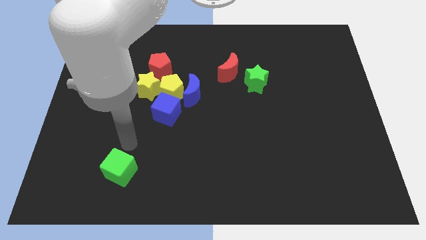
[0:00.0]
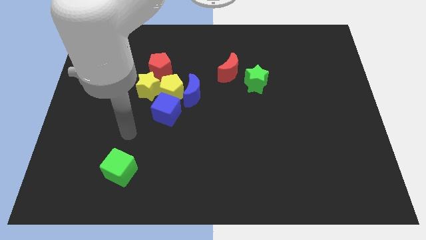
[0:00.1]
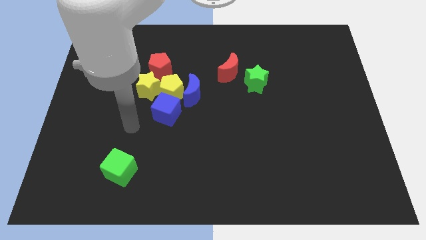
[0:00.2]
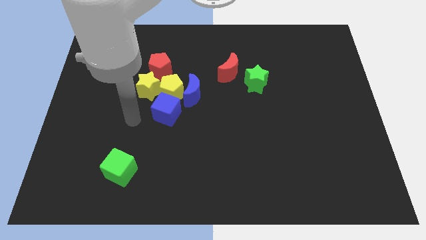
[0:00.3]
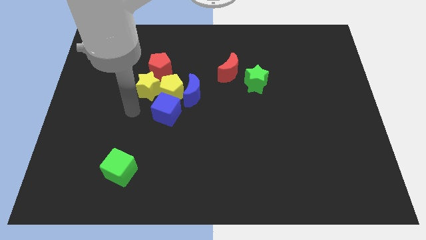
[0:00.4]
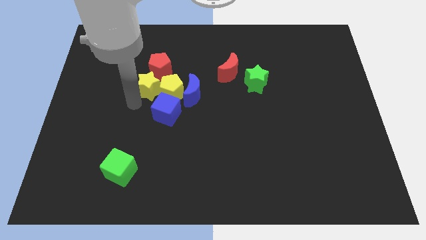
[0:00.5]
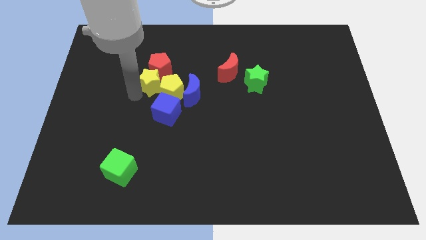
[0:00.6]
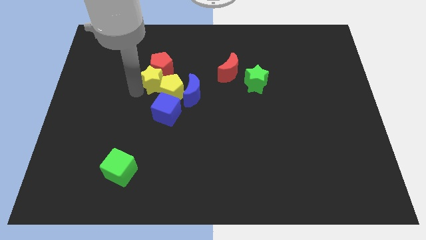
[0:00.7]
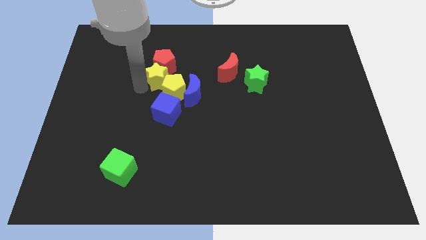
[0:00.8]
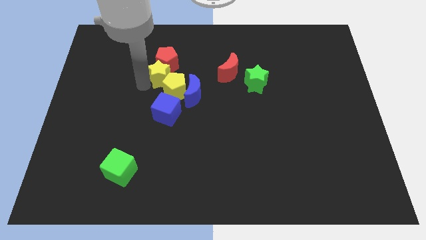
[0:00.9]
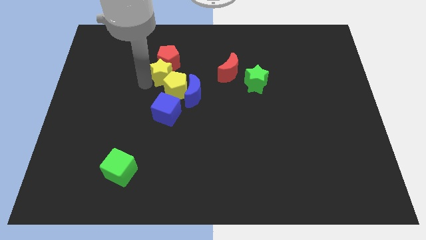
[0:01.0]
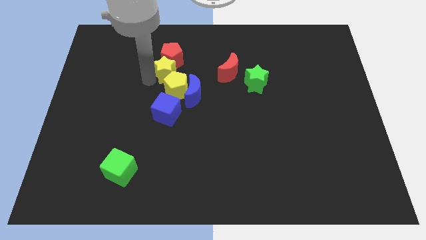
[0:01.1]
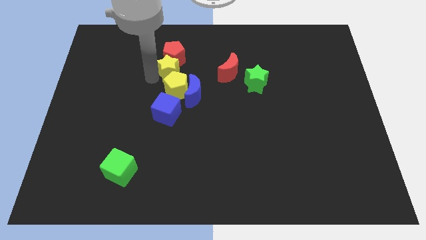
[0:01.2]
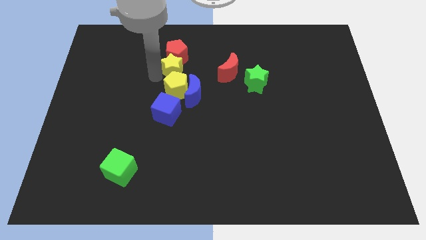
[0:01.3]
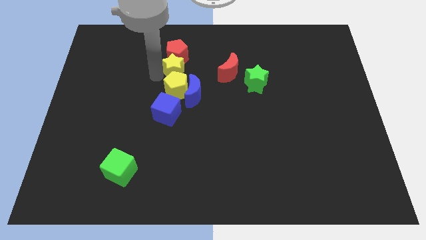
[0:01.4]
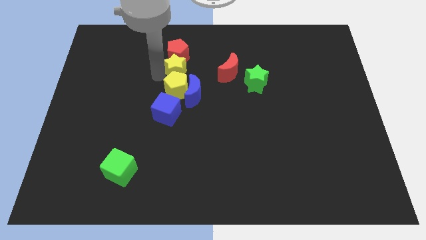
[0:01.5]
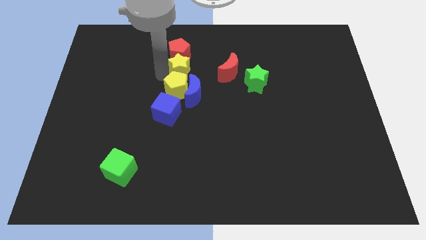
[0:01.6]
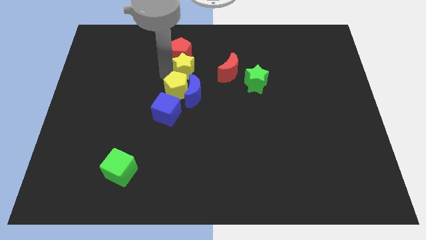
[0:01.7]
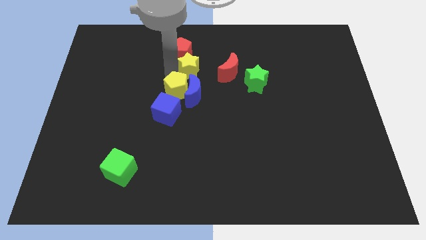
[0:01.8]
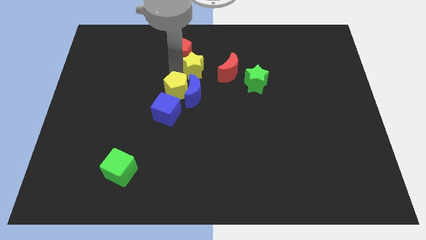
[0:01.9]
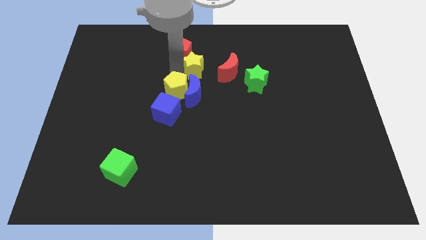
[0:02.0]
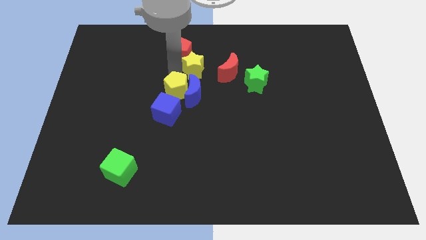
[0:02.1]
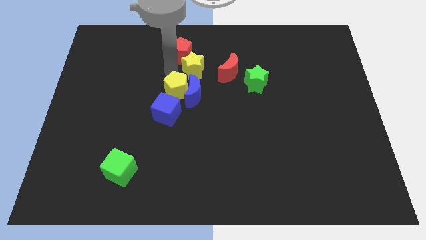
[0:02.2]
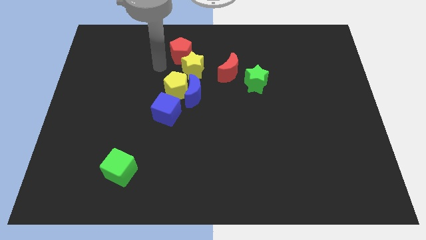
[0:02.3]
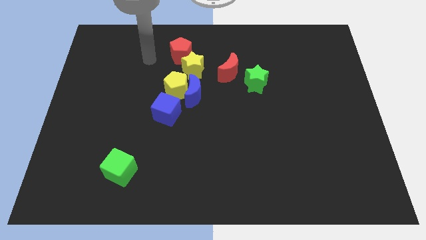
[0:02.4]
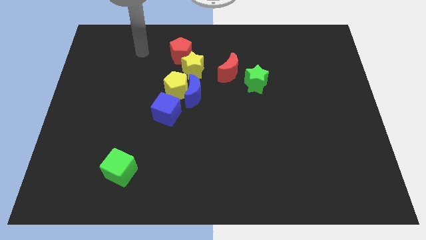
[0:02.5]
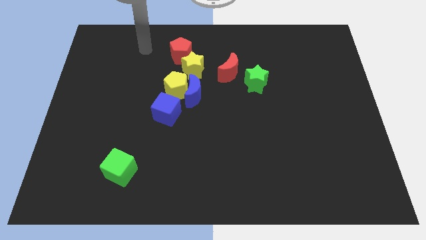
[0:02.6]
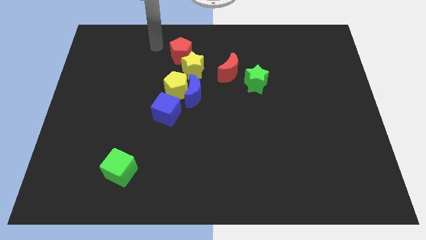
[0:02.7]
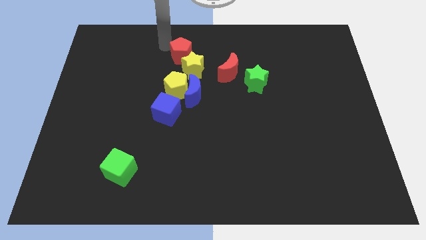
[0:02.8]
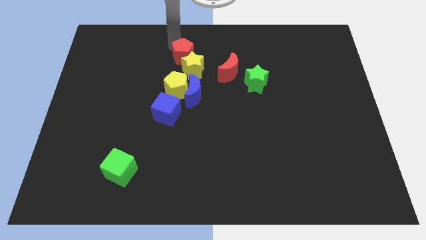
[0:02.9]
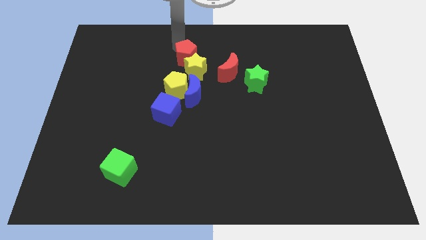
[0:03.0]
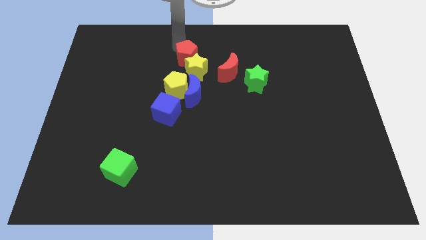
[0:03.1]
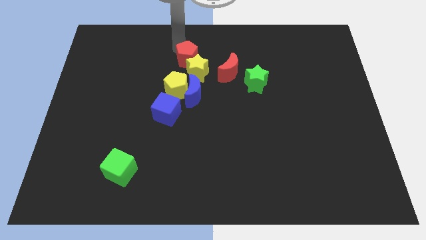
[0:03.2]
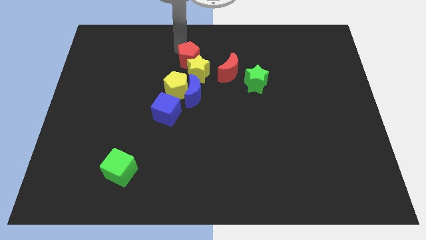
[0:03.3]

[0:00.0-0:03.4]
move yellow star above blue moon

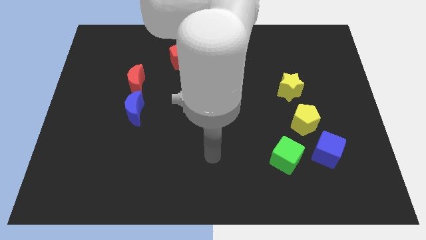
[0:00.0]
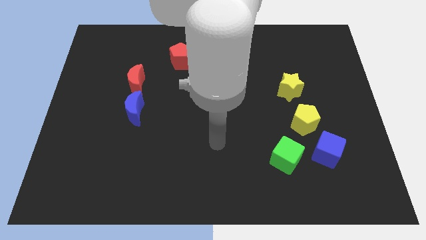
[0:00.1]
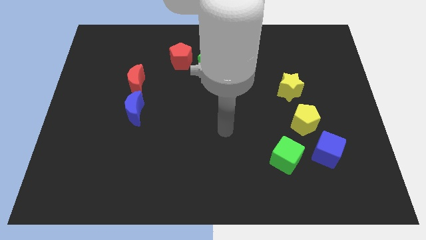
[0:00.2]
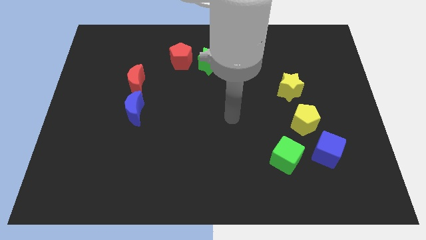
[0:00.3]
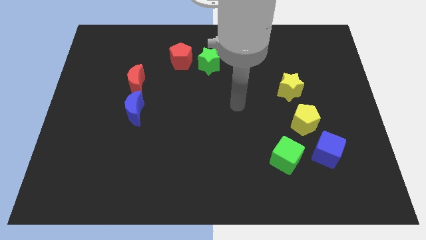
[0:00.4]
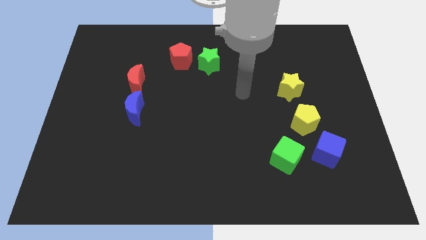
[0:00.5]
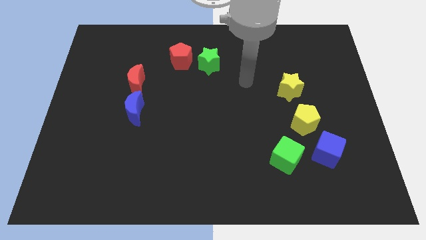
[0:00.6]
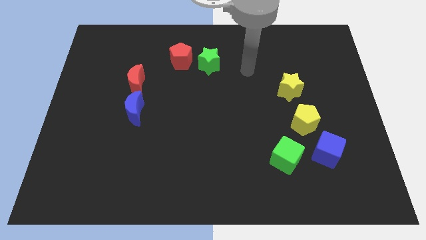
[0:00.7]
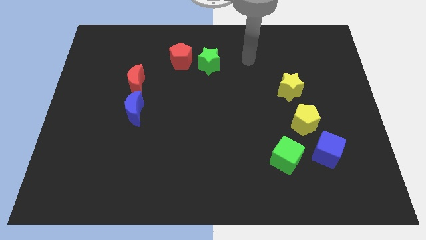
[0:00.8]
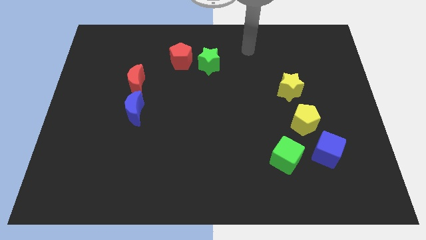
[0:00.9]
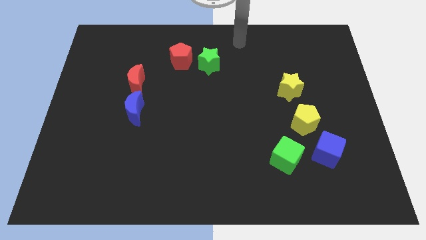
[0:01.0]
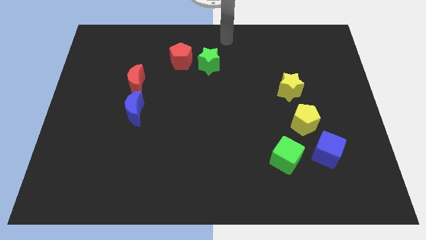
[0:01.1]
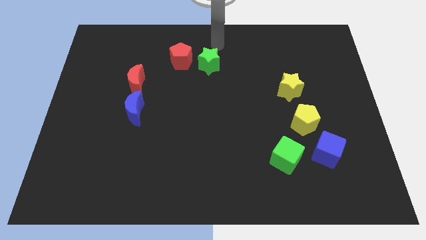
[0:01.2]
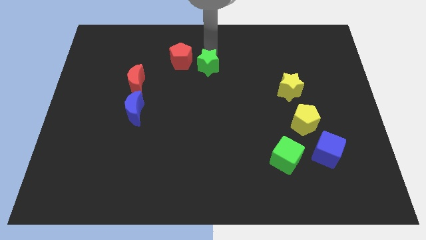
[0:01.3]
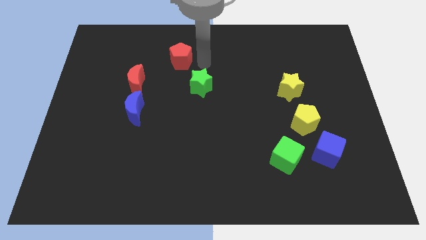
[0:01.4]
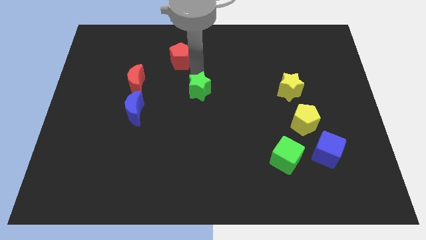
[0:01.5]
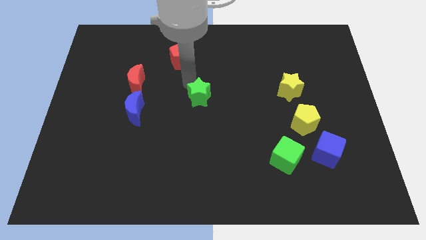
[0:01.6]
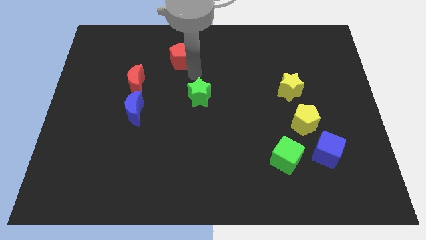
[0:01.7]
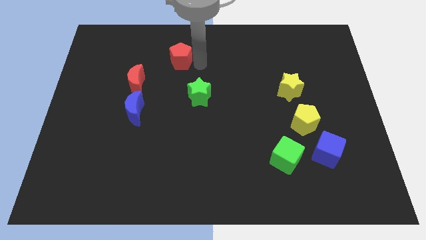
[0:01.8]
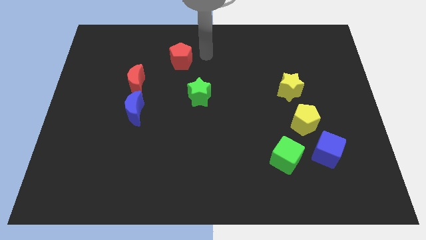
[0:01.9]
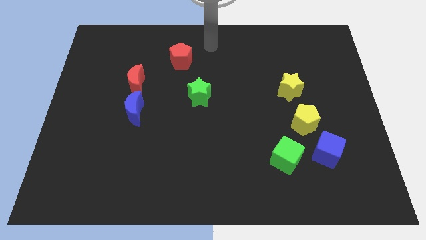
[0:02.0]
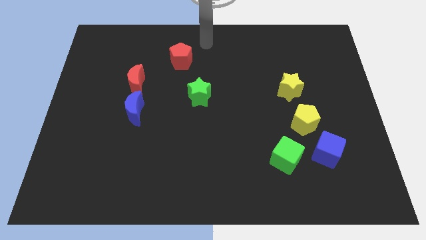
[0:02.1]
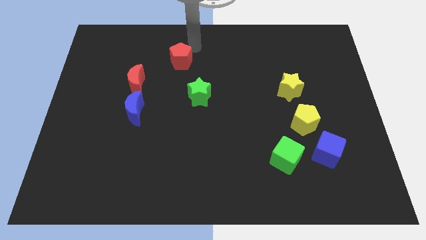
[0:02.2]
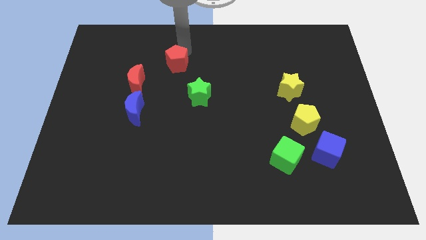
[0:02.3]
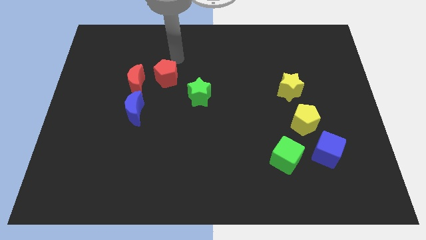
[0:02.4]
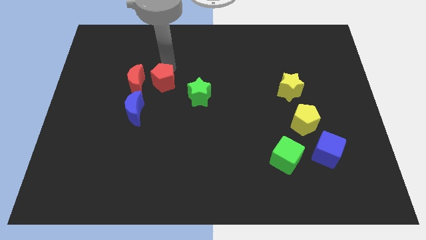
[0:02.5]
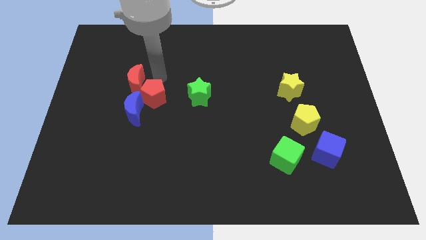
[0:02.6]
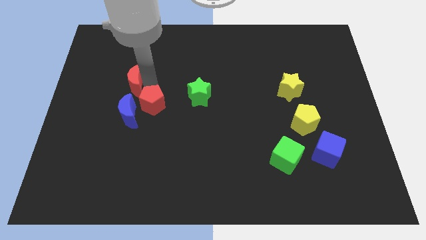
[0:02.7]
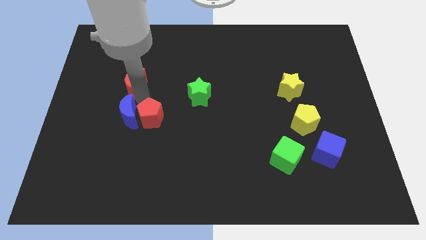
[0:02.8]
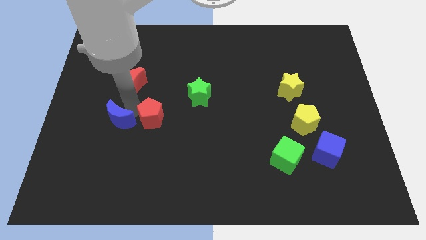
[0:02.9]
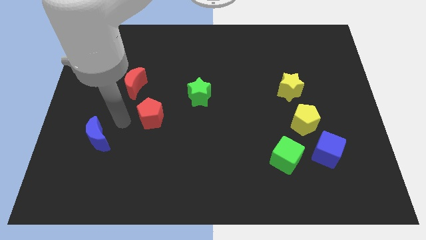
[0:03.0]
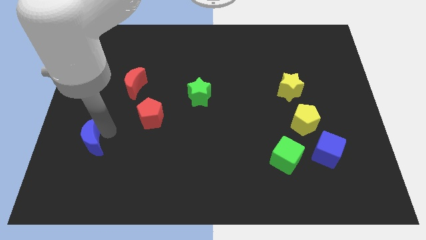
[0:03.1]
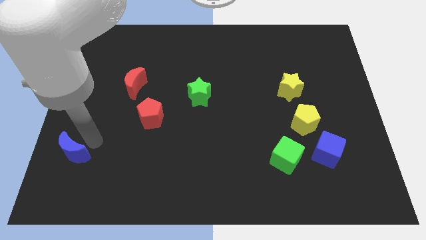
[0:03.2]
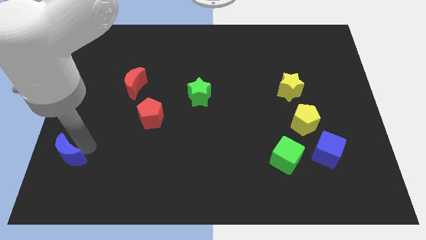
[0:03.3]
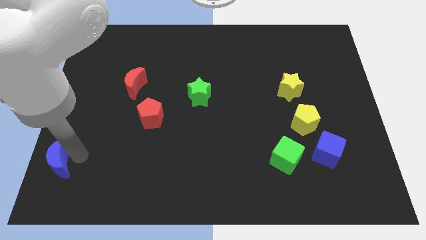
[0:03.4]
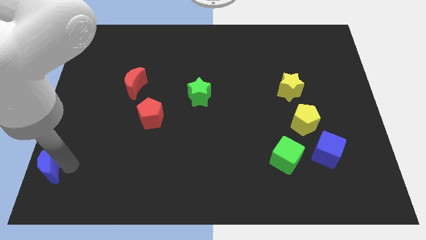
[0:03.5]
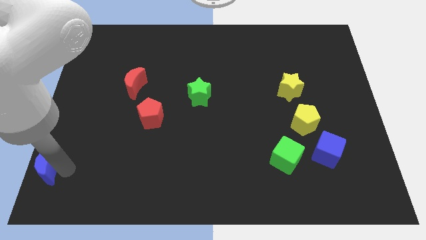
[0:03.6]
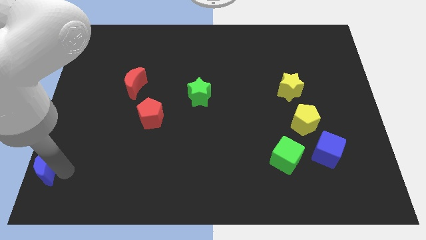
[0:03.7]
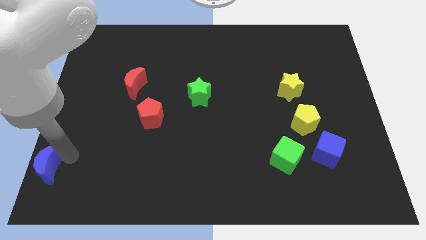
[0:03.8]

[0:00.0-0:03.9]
slide the blue crescent towards the bottom left of the board

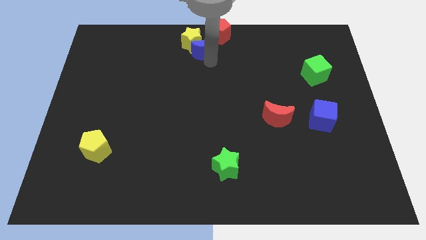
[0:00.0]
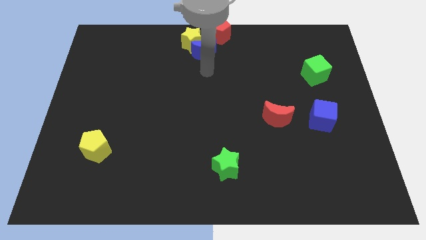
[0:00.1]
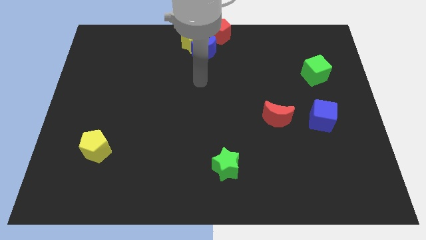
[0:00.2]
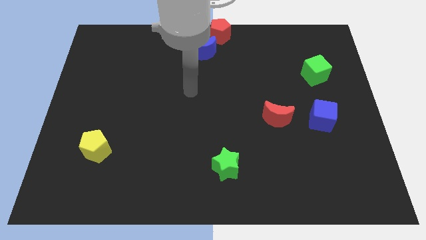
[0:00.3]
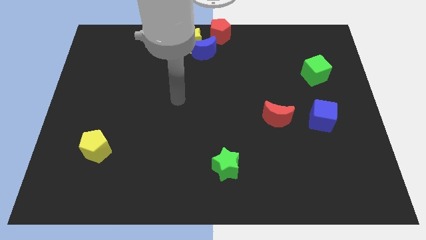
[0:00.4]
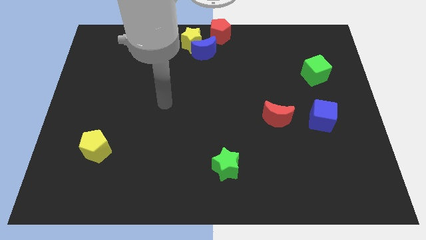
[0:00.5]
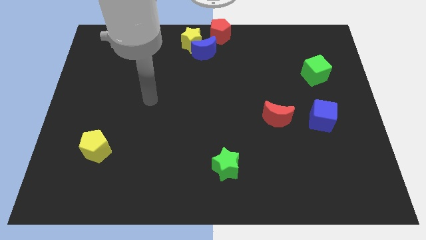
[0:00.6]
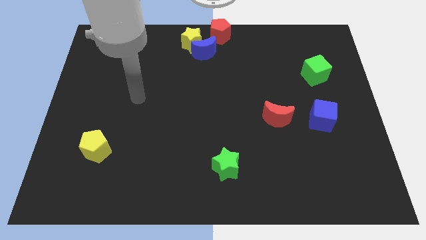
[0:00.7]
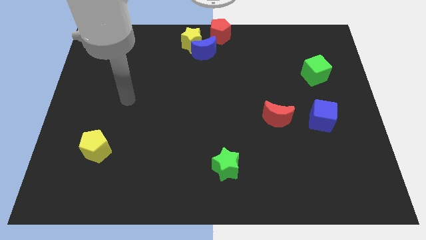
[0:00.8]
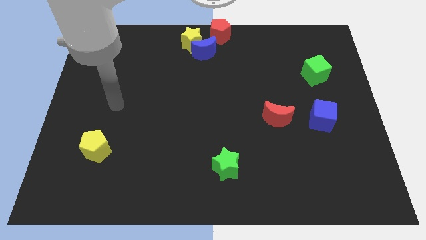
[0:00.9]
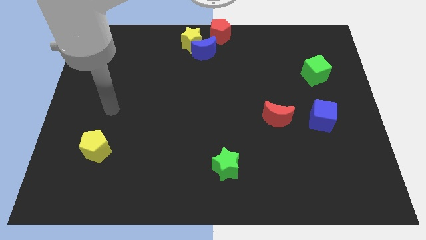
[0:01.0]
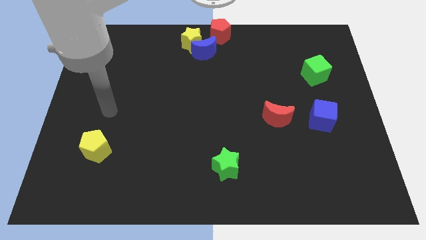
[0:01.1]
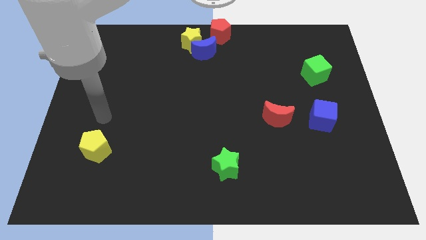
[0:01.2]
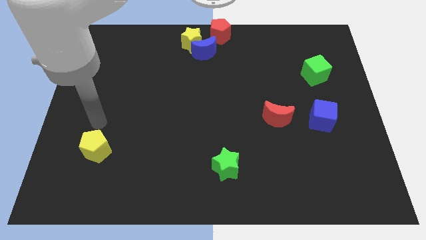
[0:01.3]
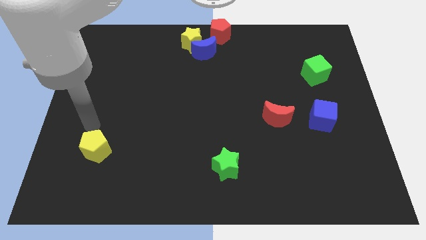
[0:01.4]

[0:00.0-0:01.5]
place the arm above the yellow pentagon

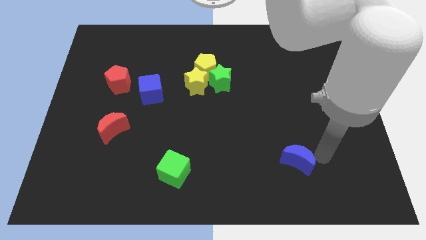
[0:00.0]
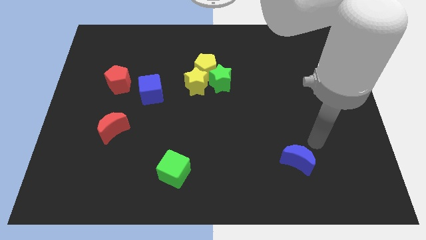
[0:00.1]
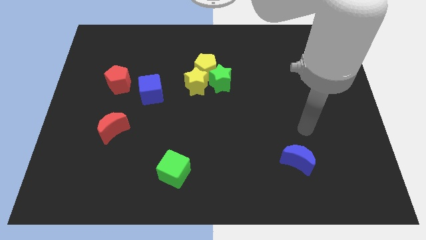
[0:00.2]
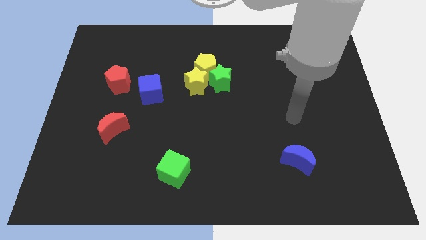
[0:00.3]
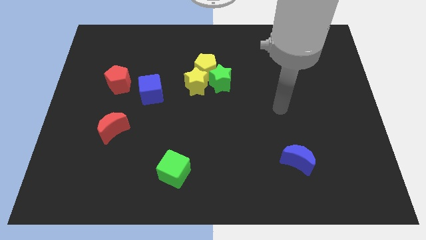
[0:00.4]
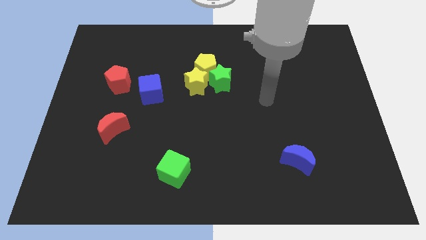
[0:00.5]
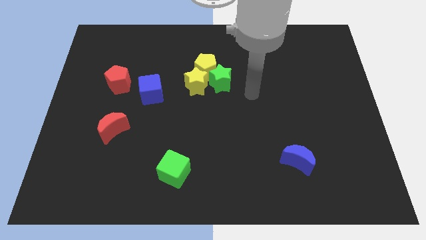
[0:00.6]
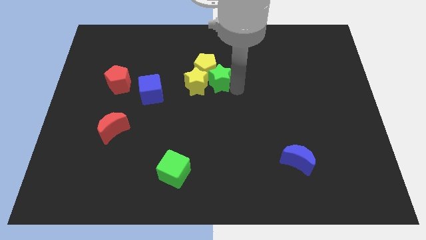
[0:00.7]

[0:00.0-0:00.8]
put arm below green star
